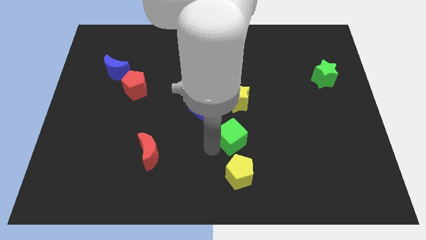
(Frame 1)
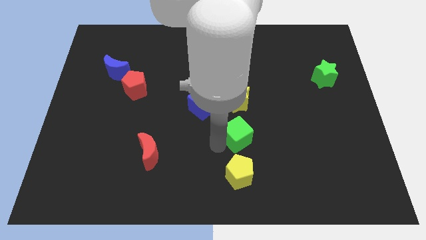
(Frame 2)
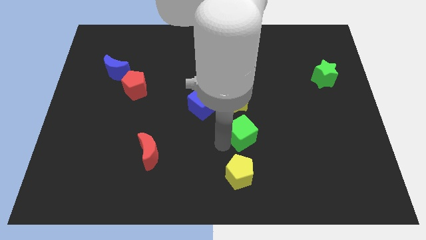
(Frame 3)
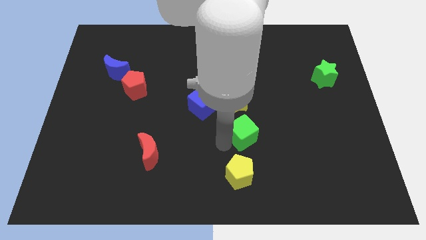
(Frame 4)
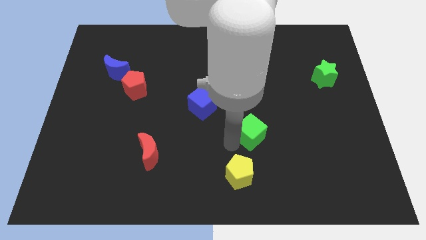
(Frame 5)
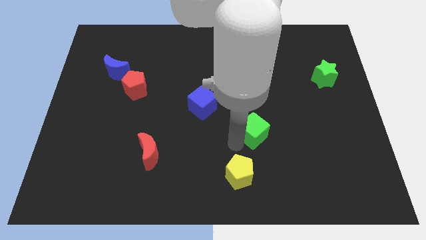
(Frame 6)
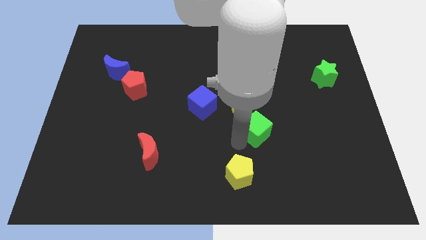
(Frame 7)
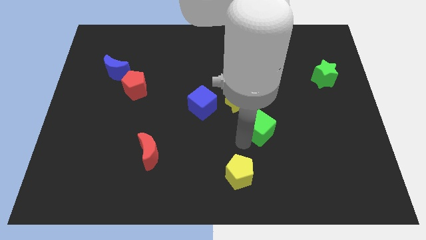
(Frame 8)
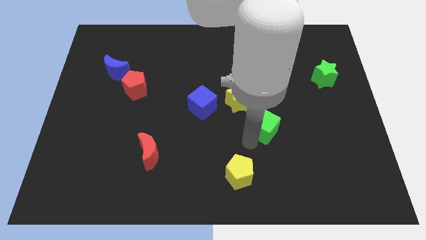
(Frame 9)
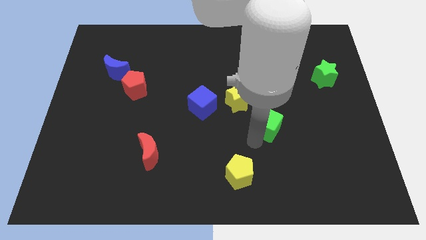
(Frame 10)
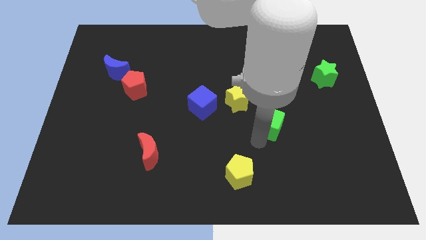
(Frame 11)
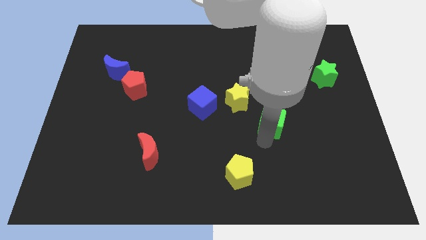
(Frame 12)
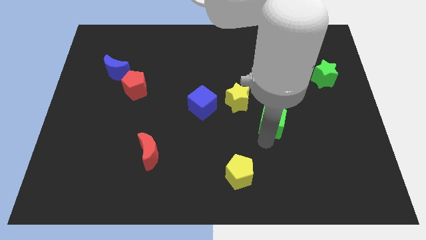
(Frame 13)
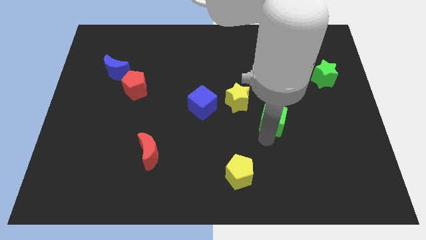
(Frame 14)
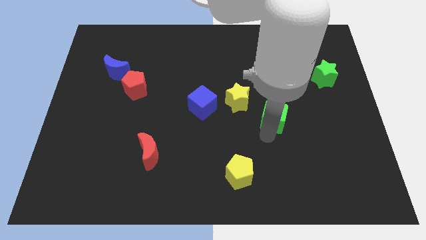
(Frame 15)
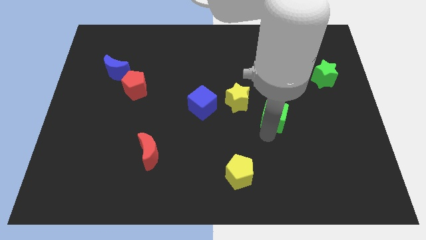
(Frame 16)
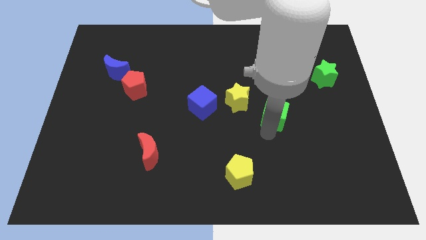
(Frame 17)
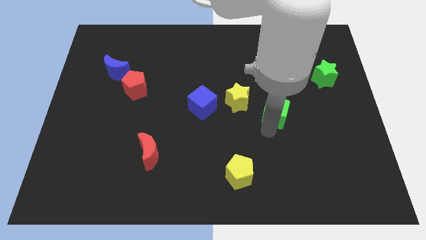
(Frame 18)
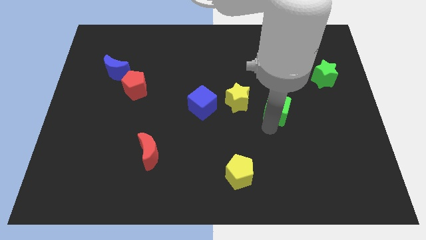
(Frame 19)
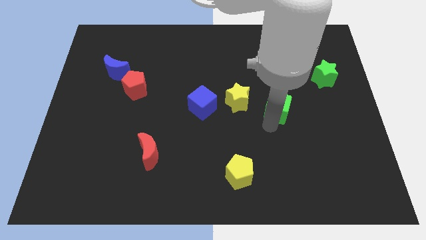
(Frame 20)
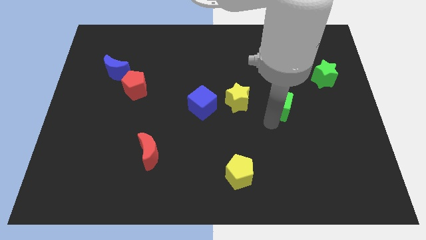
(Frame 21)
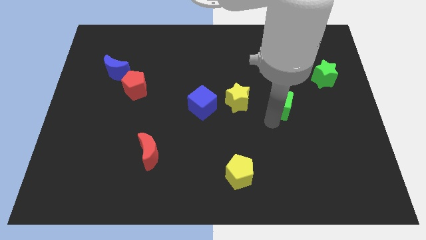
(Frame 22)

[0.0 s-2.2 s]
place the green cube diagonal to the yellow pentagon

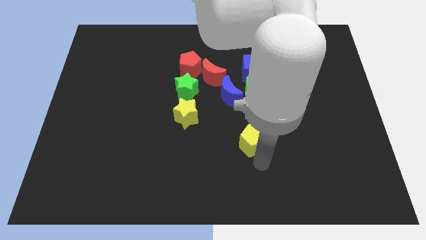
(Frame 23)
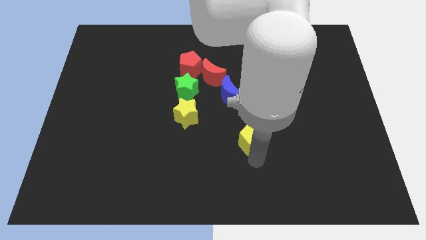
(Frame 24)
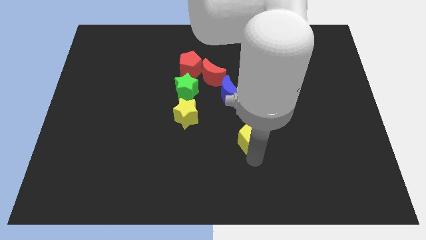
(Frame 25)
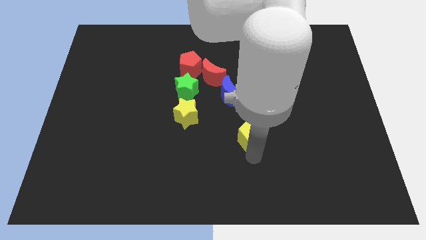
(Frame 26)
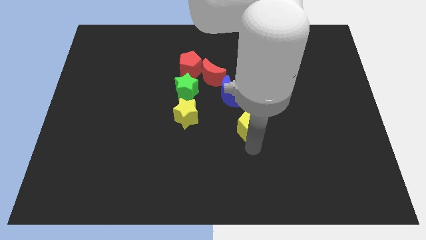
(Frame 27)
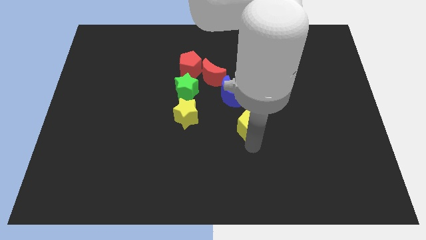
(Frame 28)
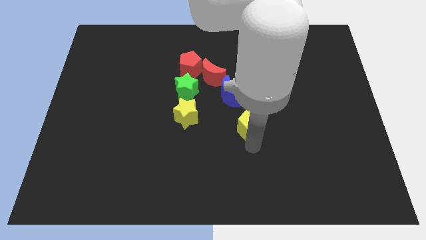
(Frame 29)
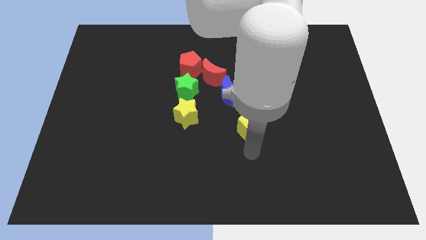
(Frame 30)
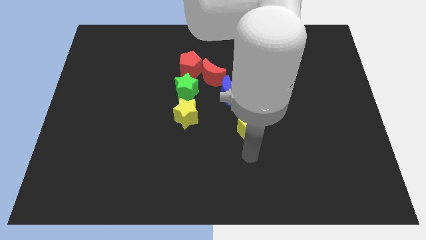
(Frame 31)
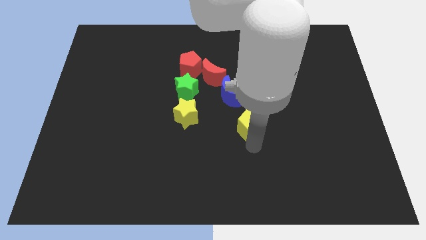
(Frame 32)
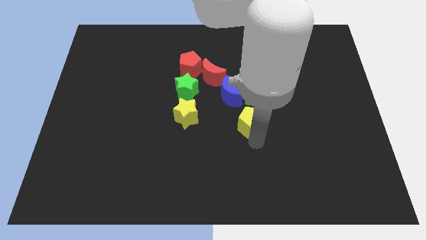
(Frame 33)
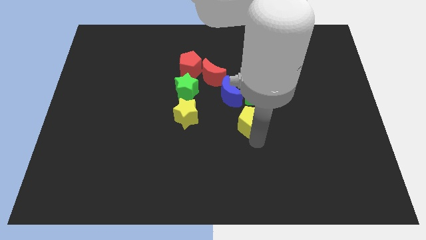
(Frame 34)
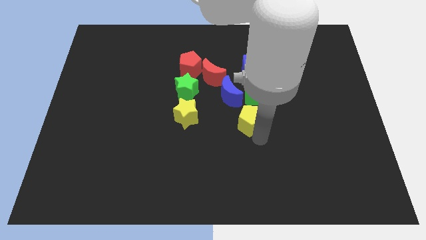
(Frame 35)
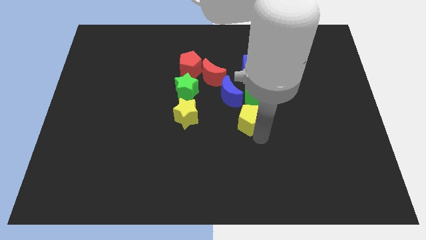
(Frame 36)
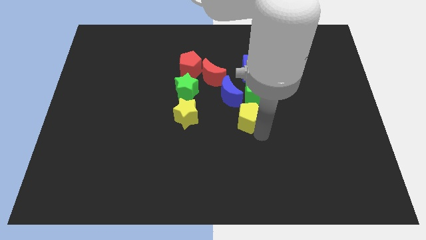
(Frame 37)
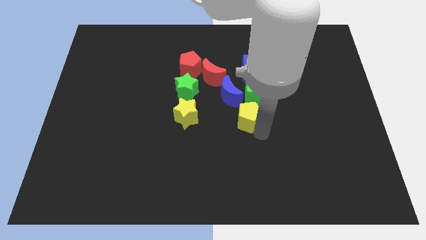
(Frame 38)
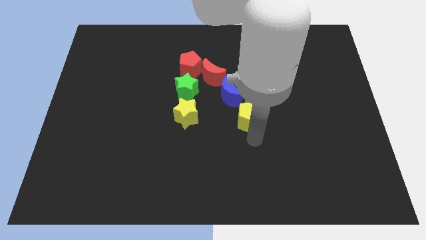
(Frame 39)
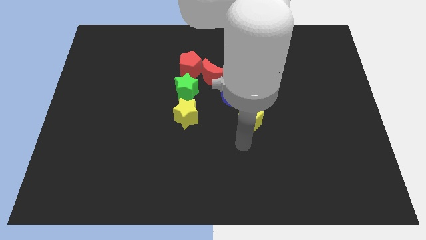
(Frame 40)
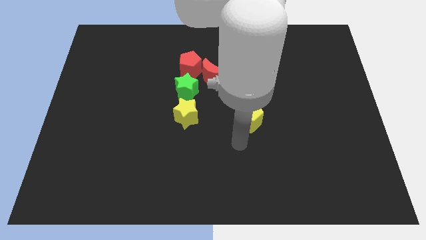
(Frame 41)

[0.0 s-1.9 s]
place the yellow pentagon at the bottom of the green cube

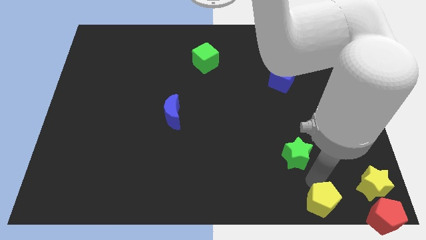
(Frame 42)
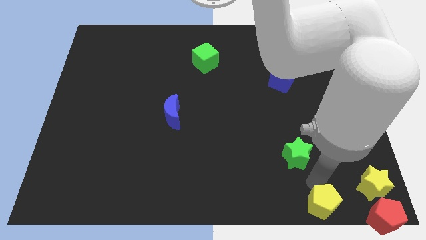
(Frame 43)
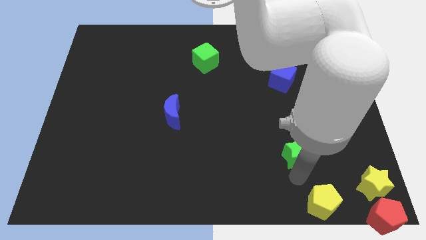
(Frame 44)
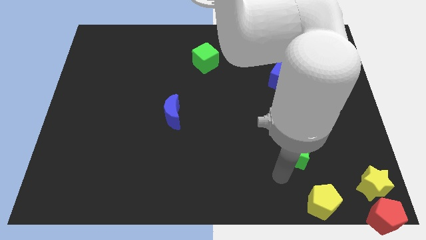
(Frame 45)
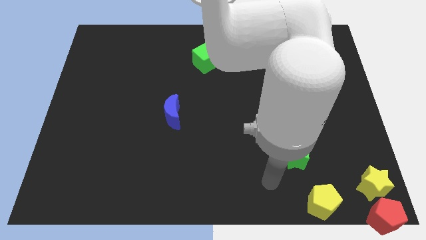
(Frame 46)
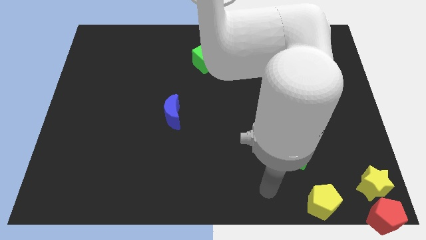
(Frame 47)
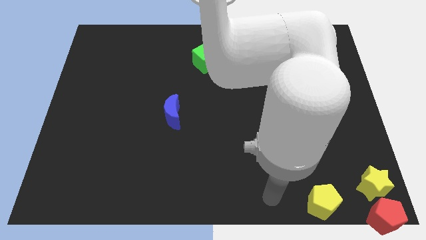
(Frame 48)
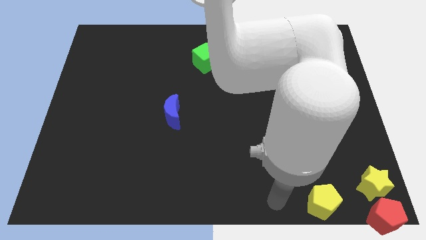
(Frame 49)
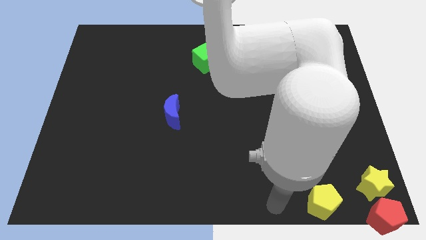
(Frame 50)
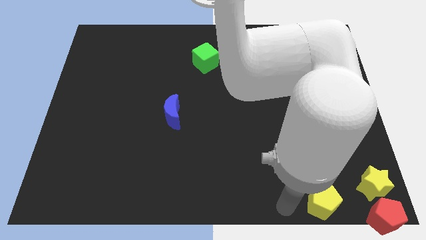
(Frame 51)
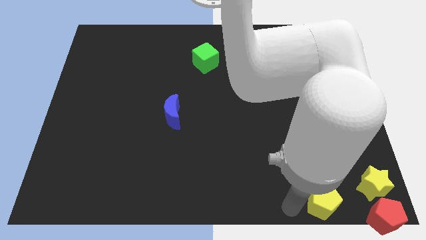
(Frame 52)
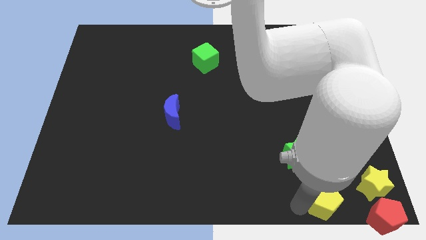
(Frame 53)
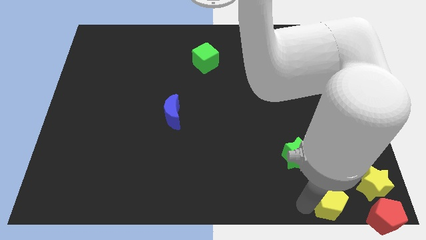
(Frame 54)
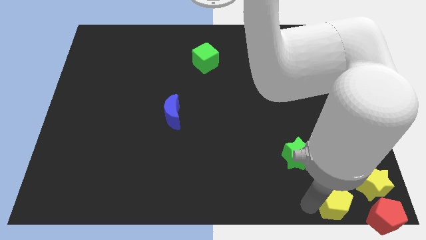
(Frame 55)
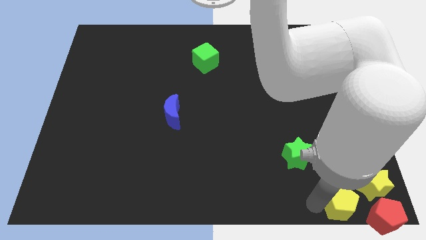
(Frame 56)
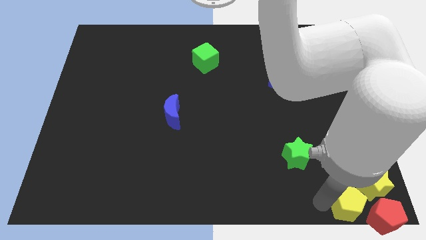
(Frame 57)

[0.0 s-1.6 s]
slightly push the yellow pentagon towards the bottom right corner of the board

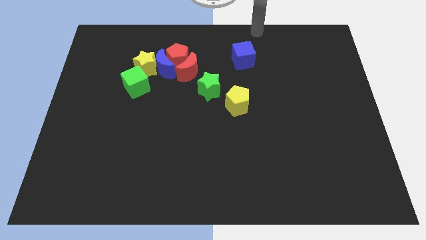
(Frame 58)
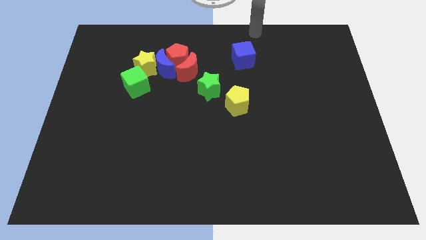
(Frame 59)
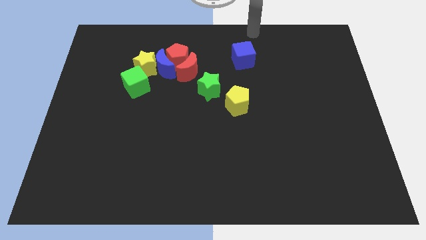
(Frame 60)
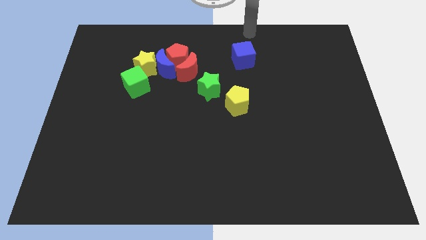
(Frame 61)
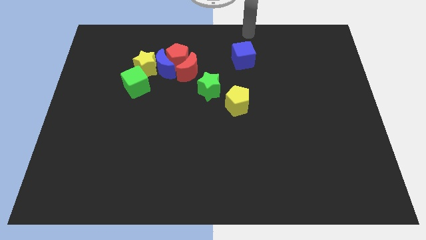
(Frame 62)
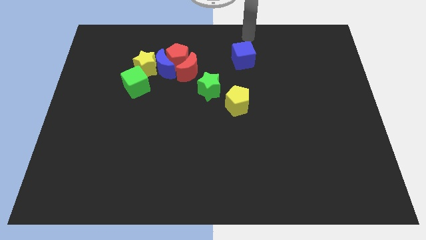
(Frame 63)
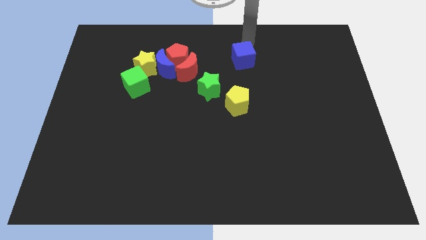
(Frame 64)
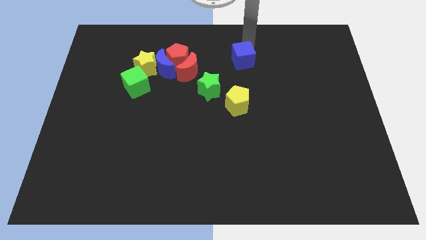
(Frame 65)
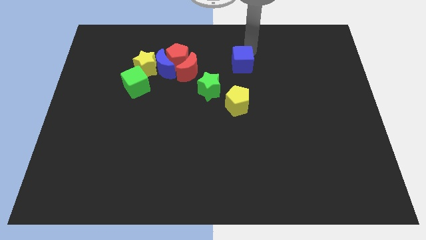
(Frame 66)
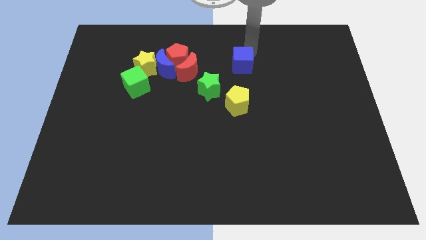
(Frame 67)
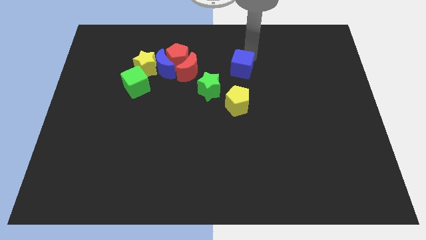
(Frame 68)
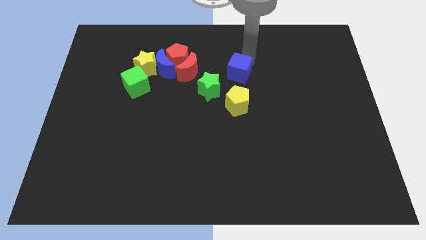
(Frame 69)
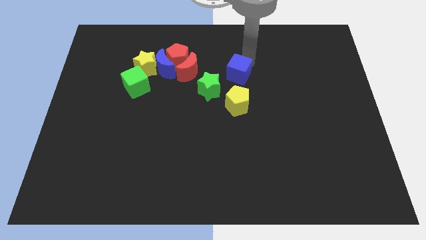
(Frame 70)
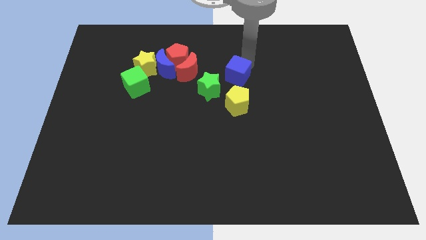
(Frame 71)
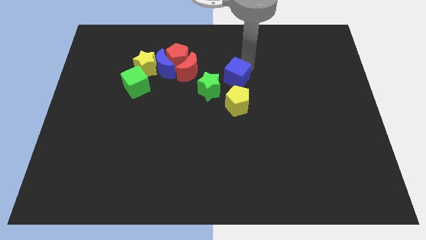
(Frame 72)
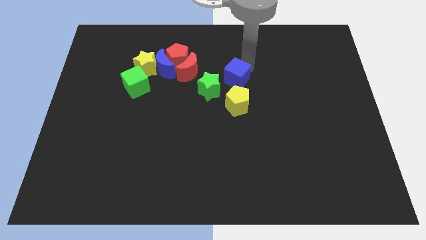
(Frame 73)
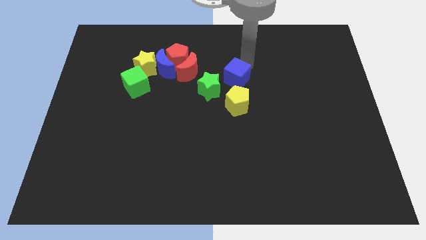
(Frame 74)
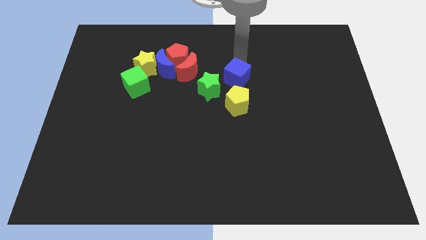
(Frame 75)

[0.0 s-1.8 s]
take the blue cube towards the top side of the yellow pentagon

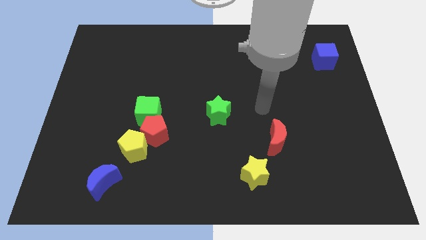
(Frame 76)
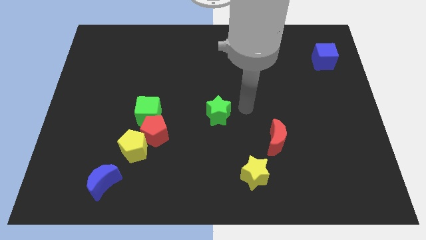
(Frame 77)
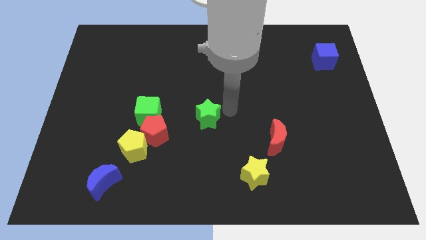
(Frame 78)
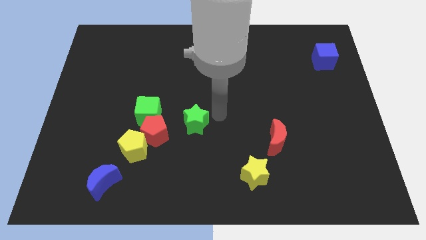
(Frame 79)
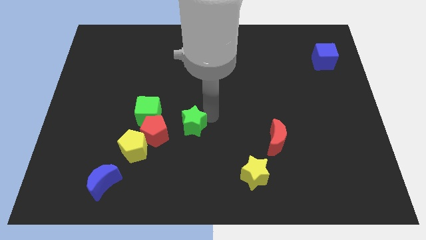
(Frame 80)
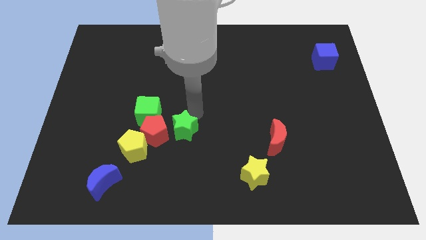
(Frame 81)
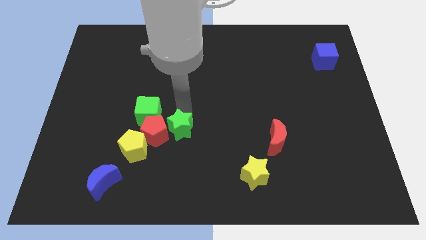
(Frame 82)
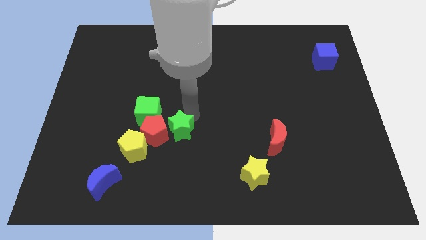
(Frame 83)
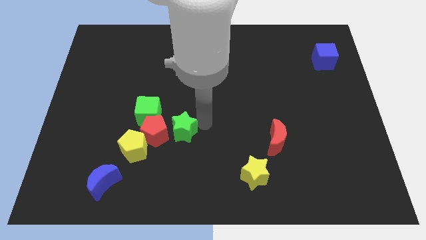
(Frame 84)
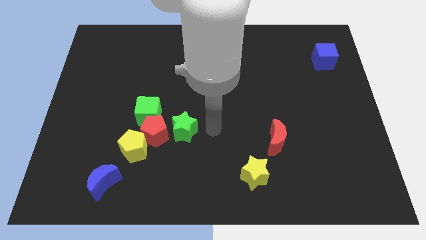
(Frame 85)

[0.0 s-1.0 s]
move the green star close to the red pentagon

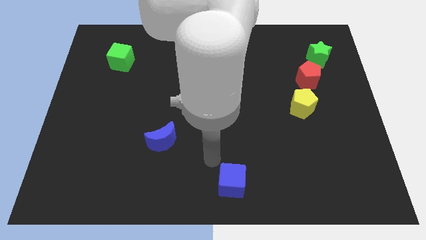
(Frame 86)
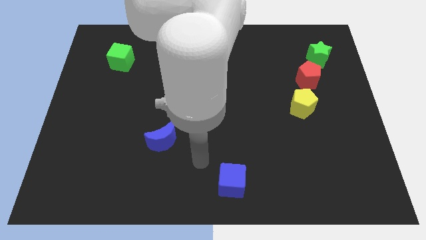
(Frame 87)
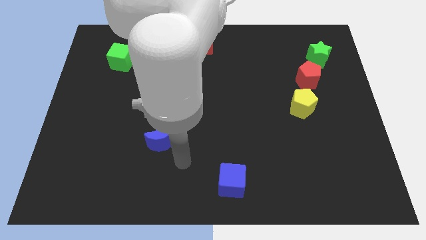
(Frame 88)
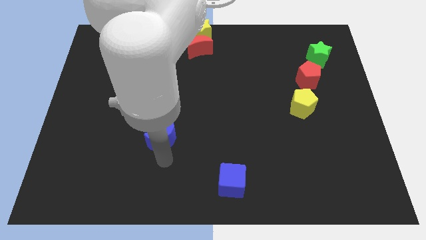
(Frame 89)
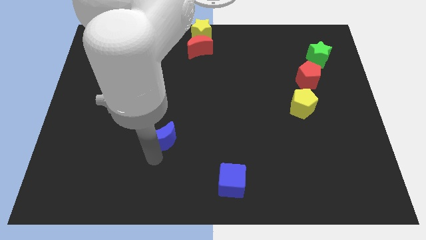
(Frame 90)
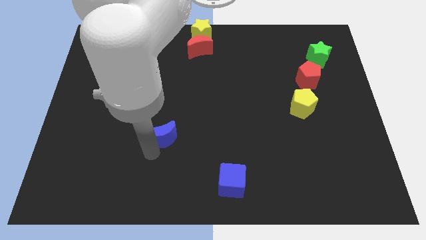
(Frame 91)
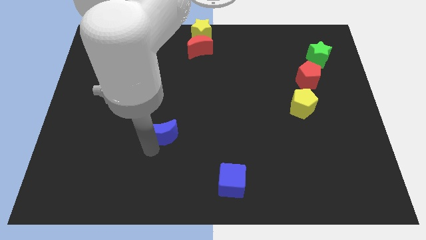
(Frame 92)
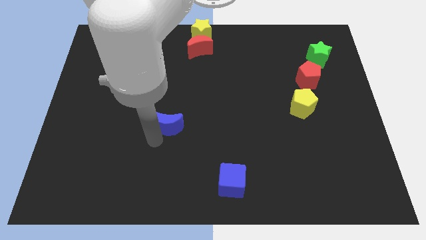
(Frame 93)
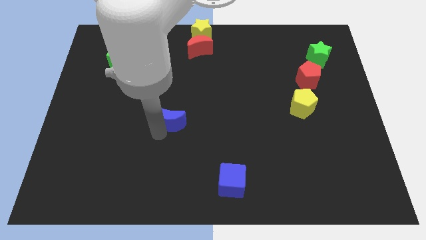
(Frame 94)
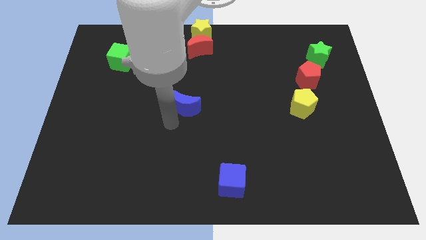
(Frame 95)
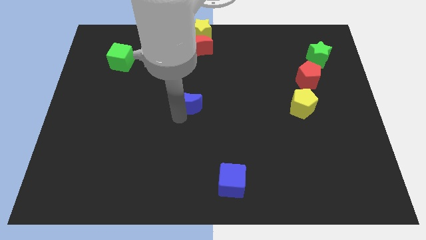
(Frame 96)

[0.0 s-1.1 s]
place the blue moon to the middle of the board
